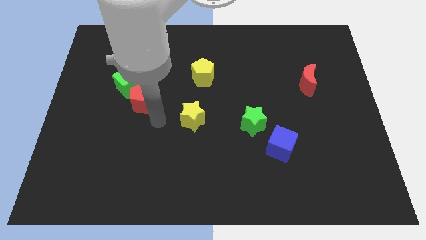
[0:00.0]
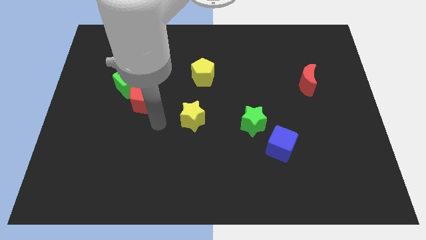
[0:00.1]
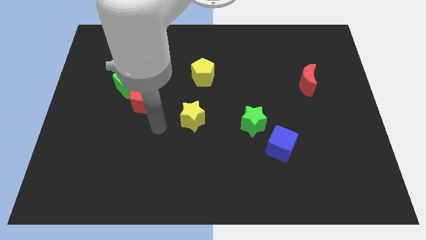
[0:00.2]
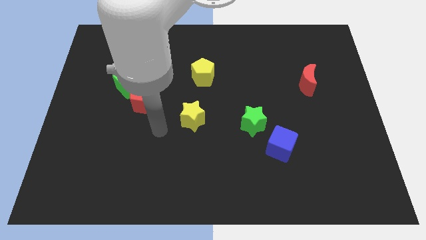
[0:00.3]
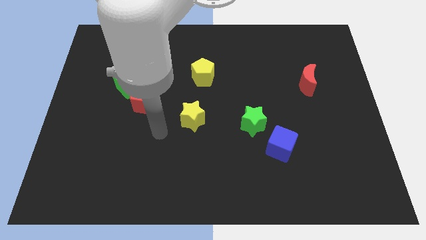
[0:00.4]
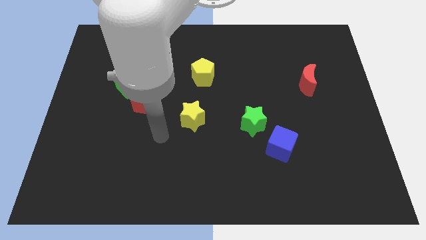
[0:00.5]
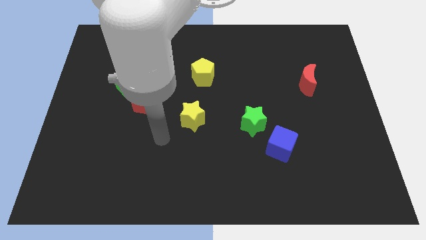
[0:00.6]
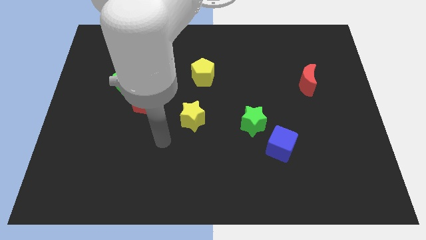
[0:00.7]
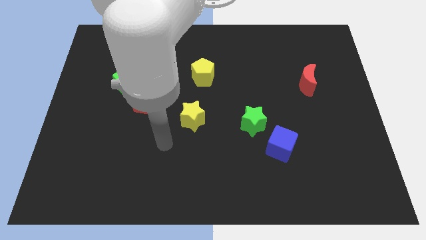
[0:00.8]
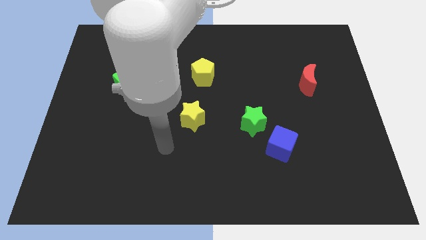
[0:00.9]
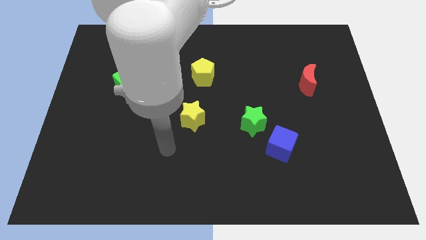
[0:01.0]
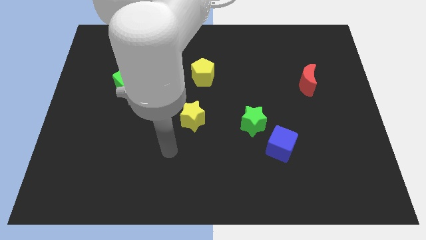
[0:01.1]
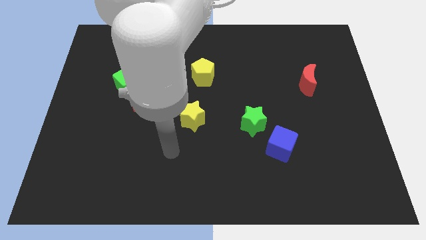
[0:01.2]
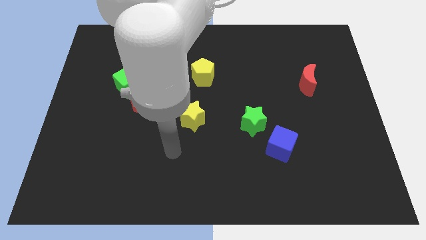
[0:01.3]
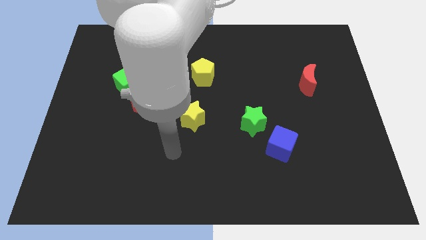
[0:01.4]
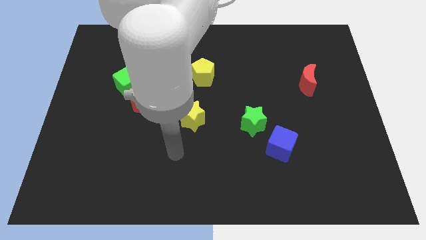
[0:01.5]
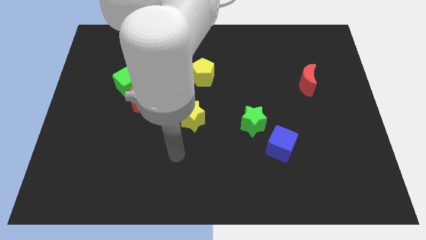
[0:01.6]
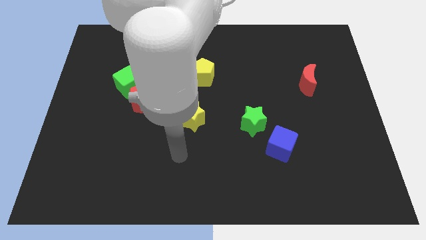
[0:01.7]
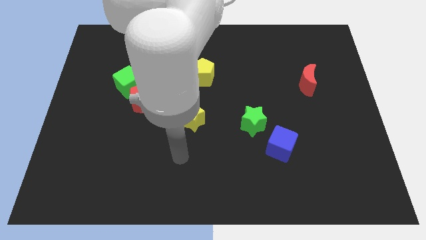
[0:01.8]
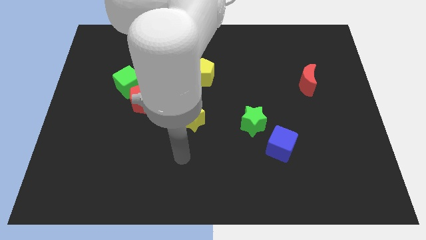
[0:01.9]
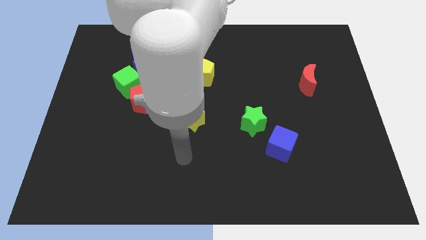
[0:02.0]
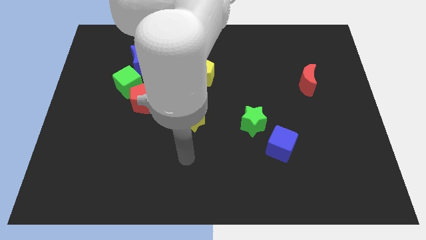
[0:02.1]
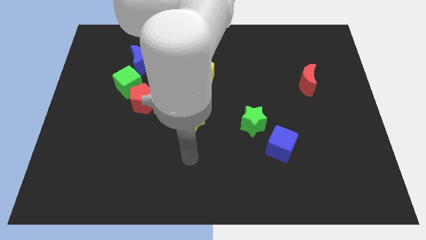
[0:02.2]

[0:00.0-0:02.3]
point your arm below the yellow star

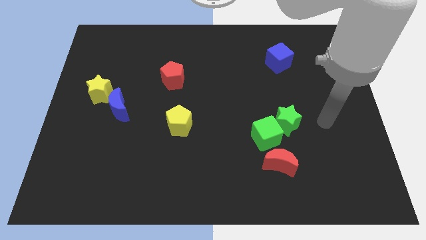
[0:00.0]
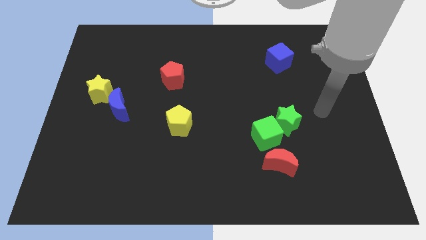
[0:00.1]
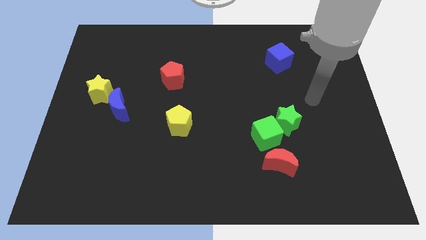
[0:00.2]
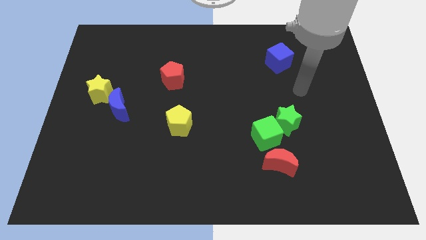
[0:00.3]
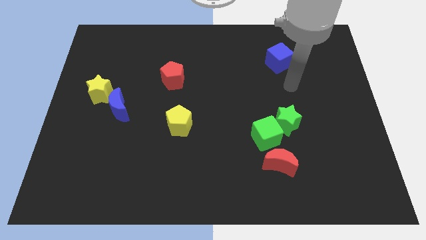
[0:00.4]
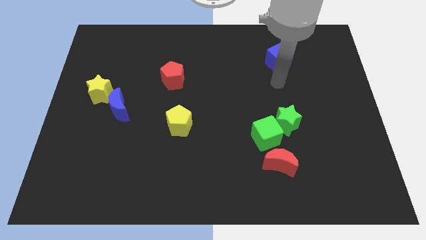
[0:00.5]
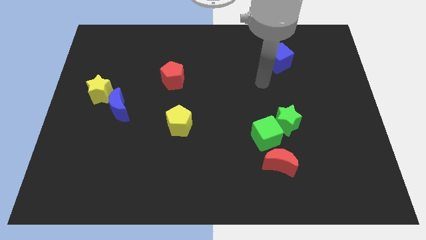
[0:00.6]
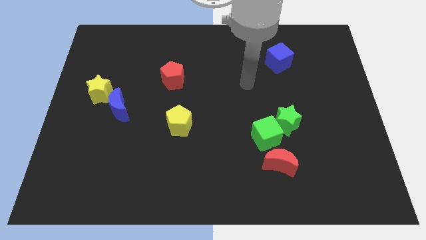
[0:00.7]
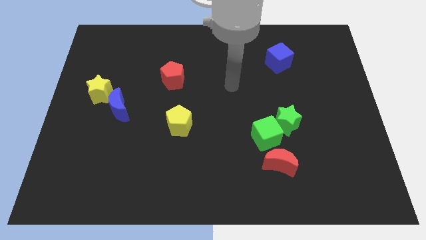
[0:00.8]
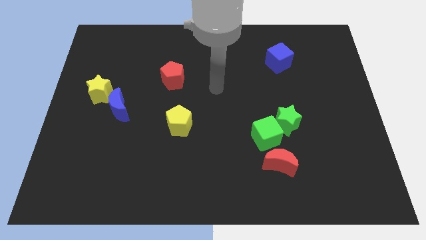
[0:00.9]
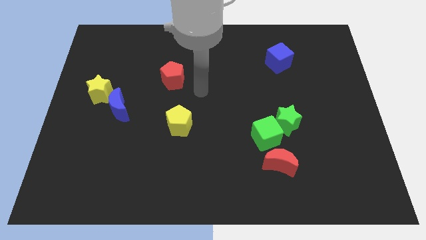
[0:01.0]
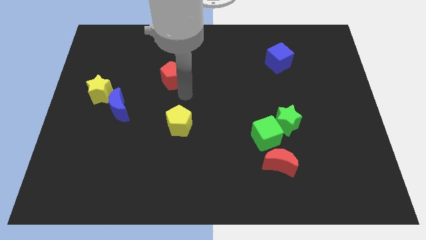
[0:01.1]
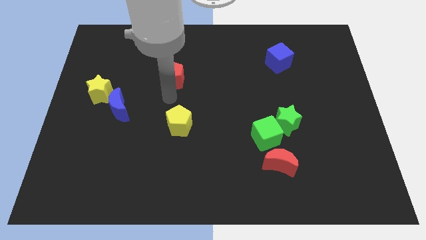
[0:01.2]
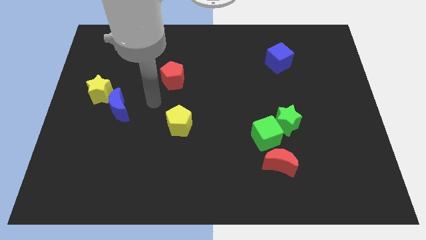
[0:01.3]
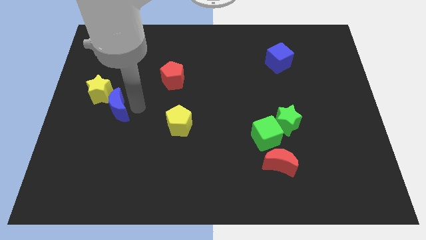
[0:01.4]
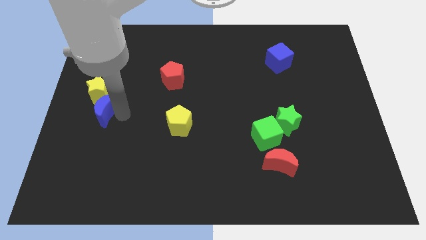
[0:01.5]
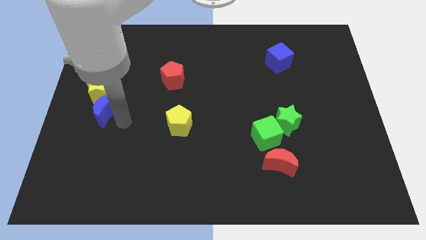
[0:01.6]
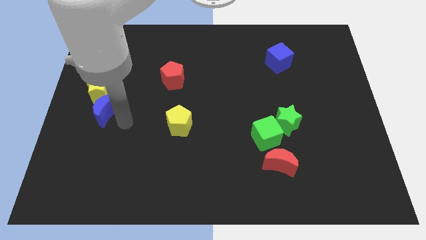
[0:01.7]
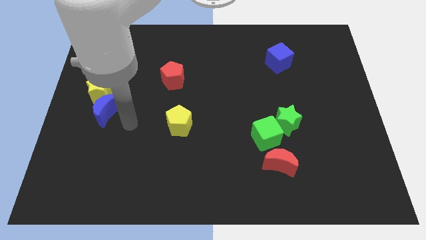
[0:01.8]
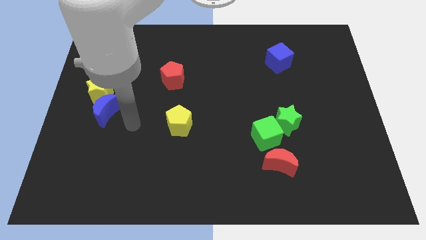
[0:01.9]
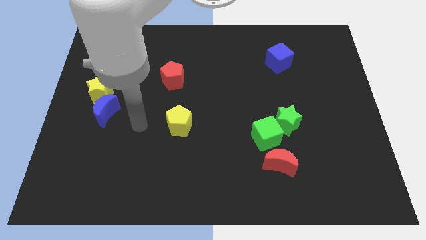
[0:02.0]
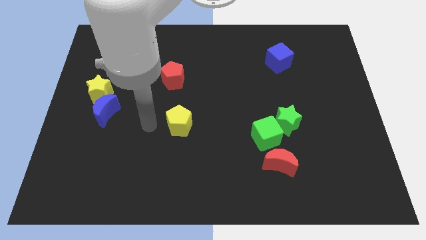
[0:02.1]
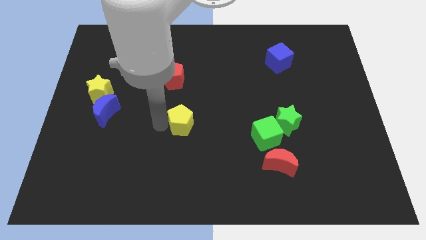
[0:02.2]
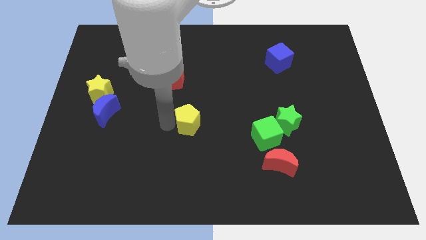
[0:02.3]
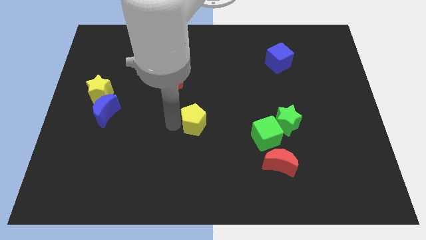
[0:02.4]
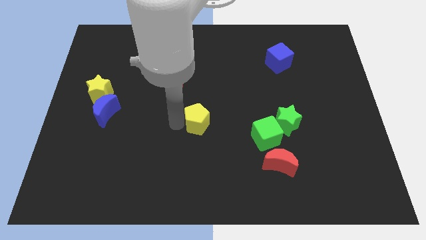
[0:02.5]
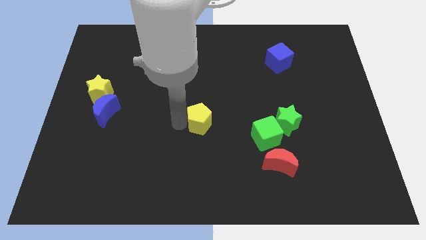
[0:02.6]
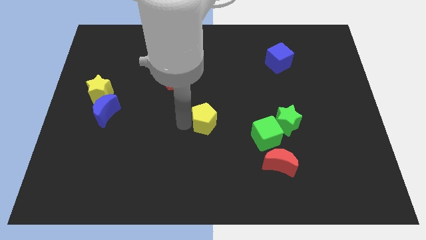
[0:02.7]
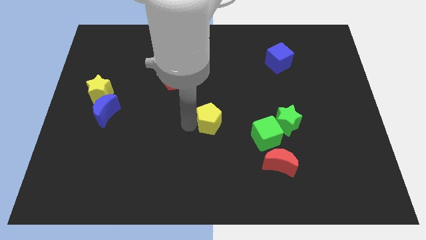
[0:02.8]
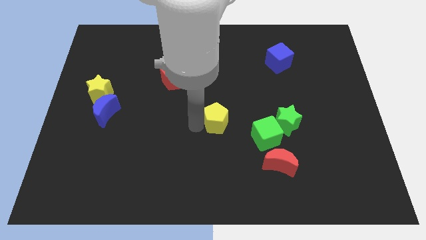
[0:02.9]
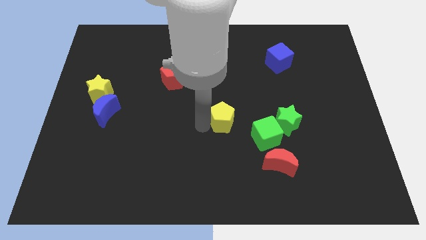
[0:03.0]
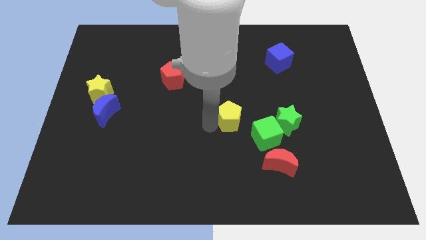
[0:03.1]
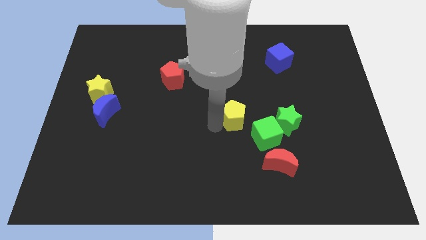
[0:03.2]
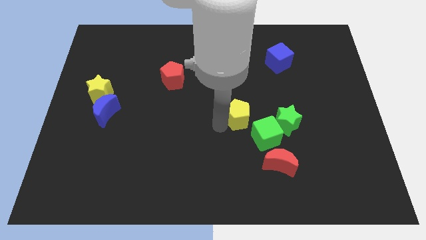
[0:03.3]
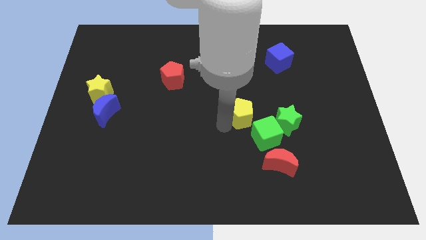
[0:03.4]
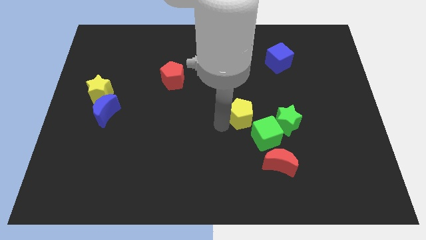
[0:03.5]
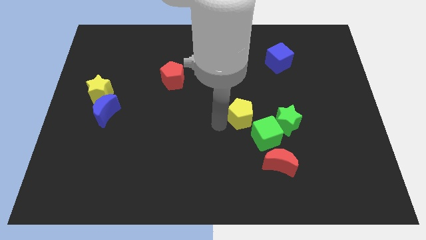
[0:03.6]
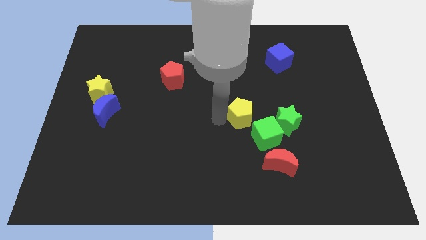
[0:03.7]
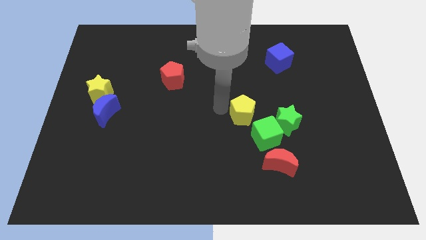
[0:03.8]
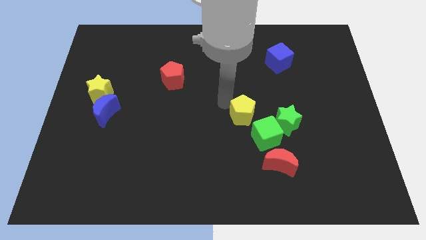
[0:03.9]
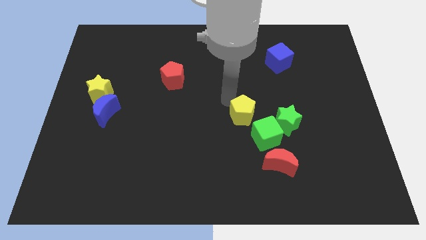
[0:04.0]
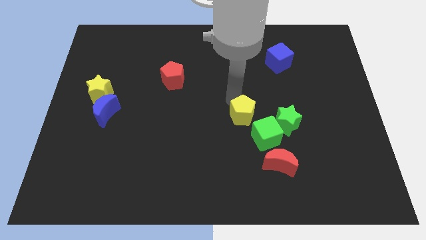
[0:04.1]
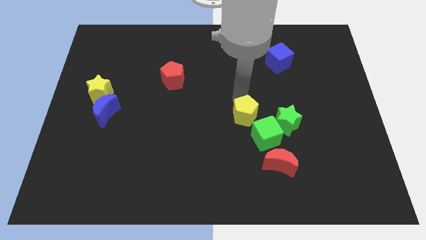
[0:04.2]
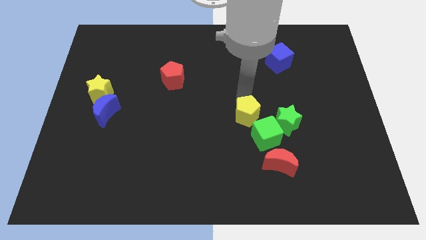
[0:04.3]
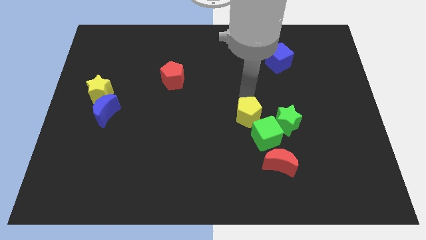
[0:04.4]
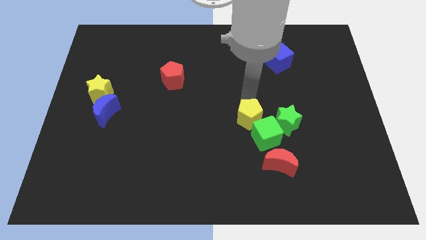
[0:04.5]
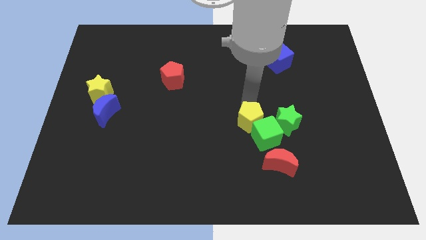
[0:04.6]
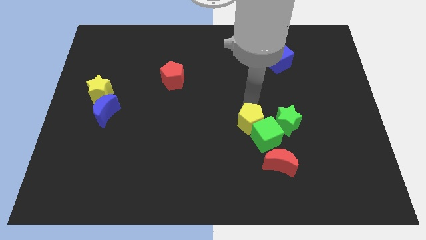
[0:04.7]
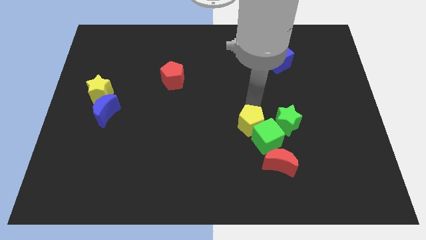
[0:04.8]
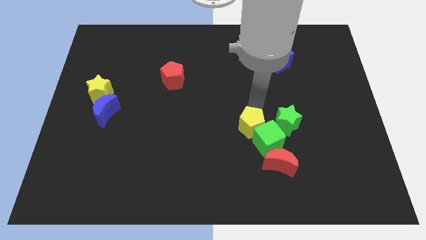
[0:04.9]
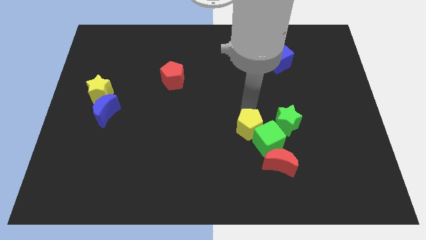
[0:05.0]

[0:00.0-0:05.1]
move the yellow pentagon into the group of object

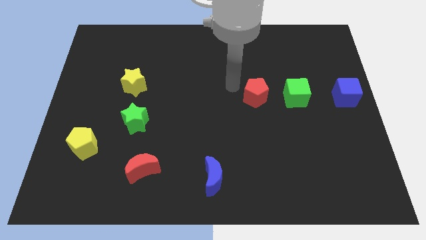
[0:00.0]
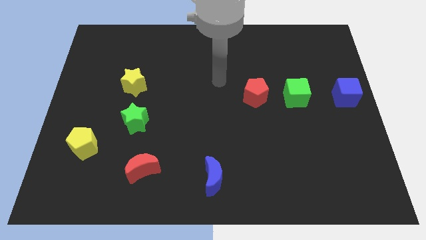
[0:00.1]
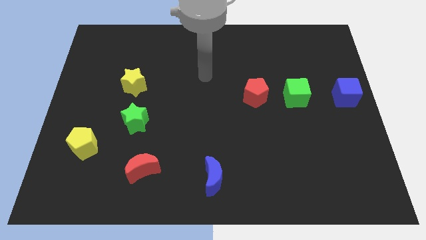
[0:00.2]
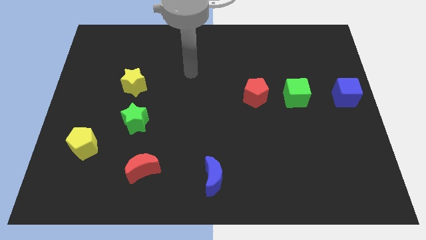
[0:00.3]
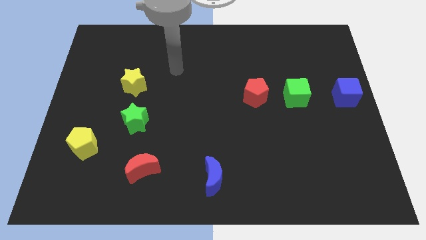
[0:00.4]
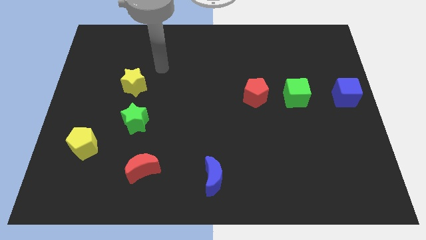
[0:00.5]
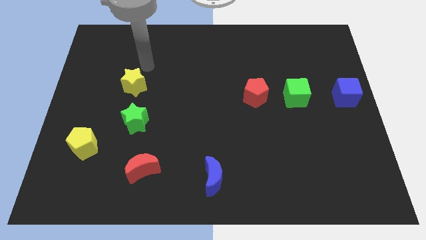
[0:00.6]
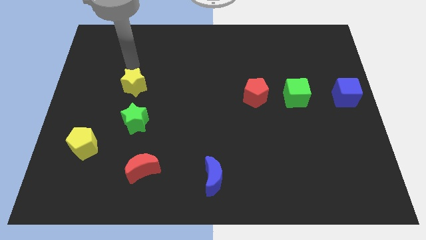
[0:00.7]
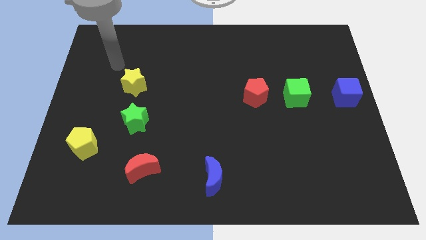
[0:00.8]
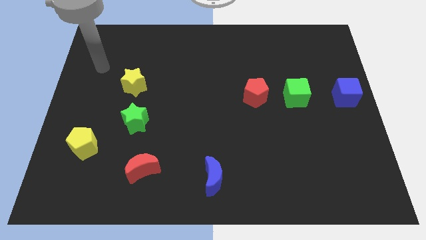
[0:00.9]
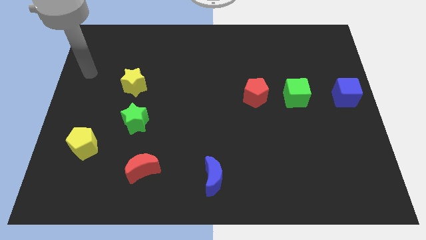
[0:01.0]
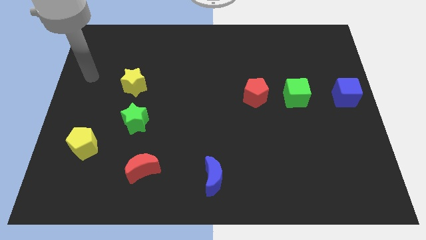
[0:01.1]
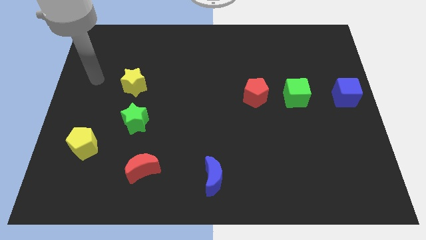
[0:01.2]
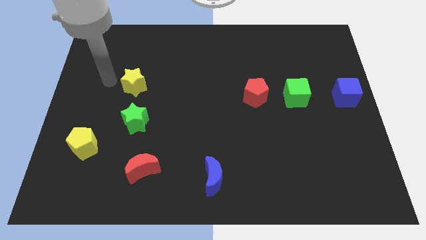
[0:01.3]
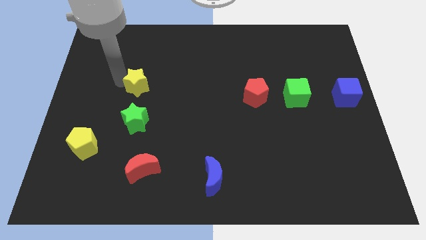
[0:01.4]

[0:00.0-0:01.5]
move your arm left to the yellow star
